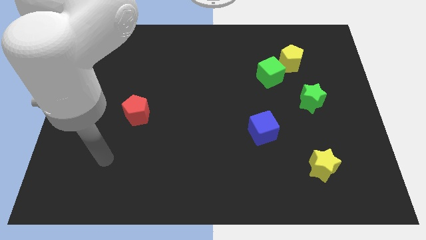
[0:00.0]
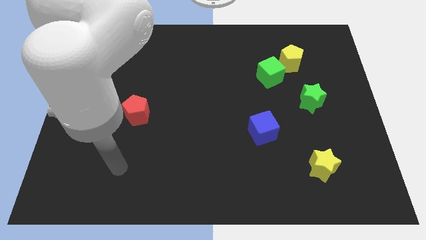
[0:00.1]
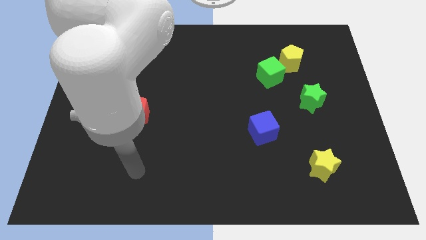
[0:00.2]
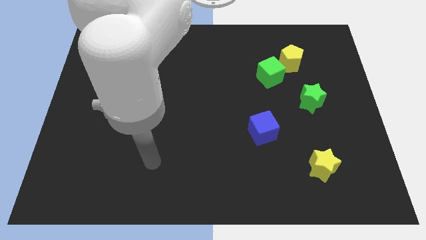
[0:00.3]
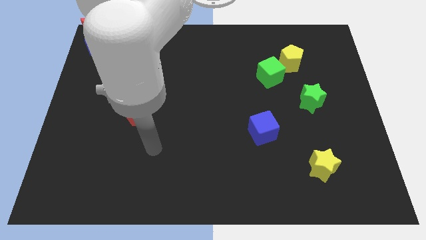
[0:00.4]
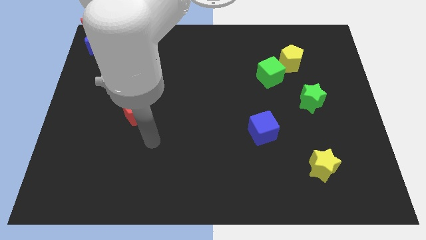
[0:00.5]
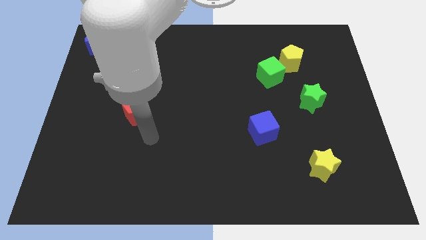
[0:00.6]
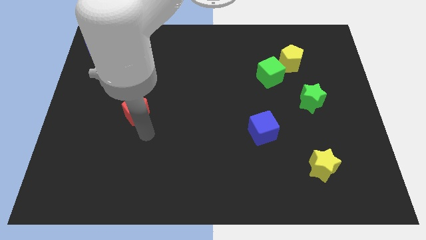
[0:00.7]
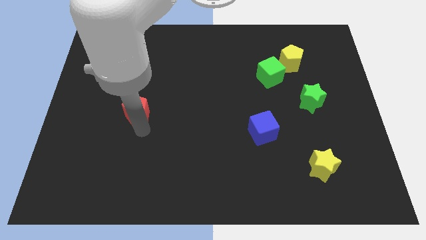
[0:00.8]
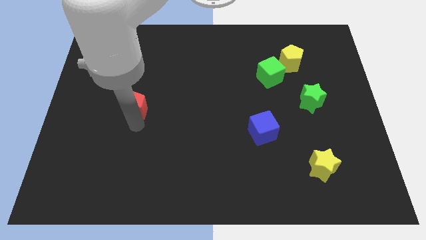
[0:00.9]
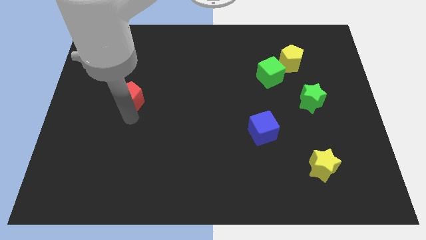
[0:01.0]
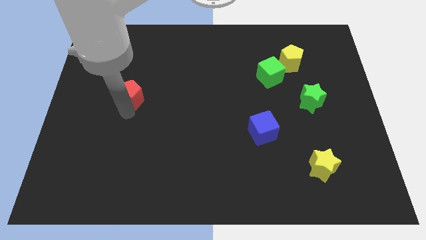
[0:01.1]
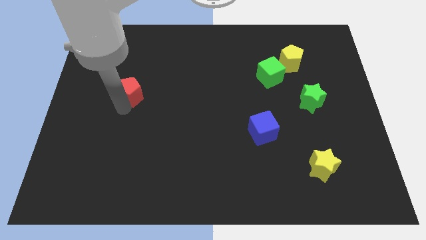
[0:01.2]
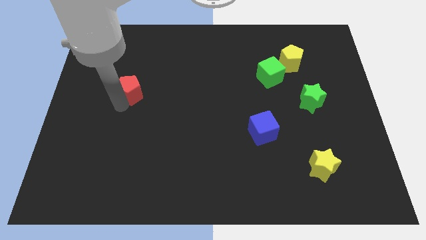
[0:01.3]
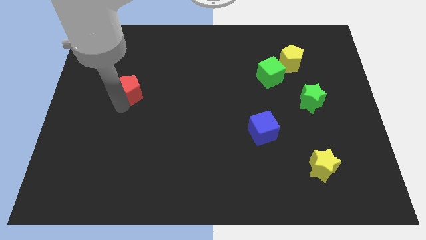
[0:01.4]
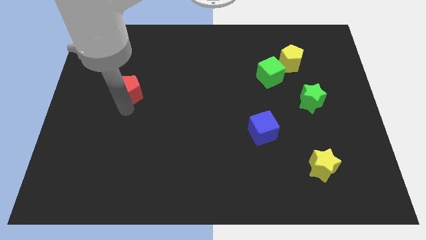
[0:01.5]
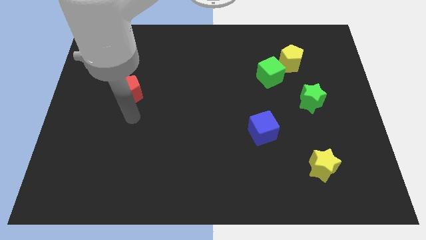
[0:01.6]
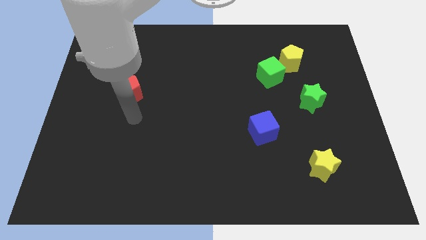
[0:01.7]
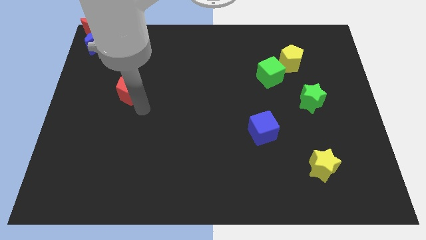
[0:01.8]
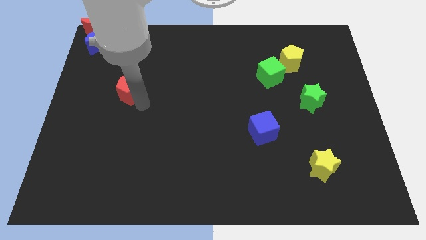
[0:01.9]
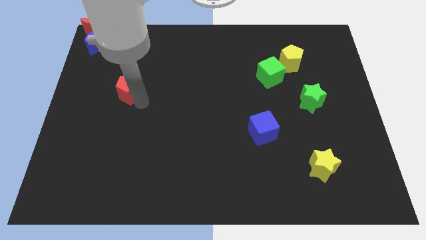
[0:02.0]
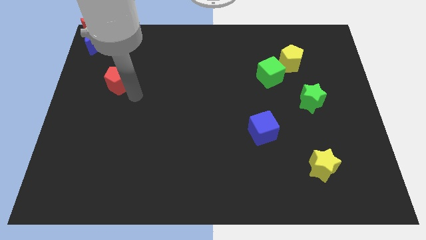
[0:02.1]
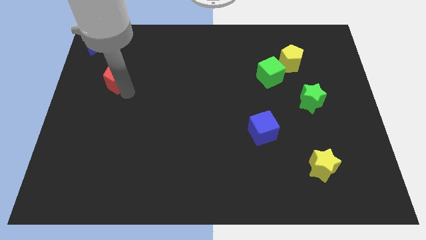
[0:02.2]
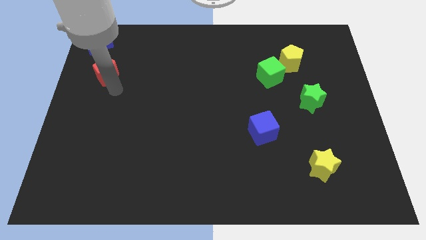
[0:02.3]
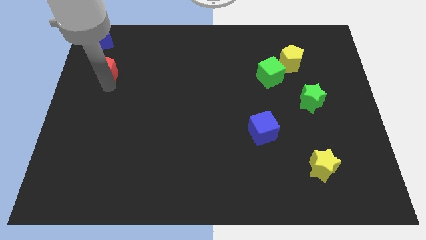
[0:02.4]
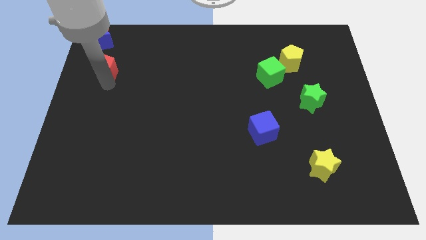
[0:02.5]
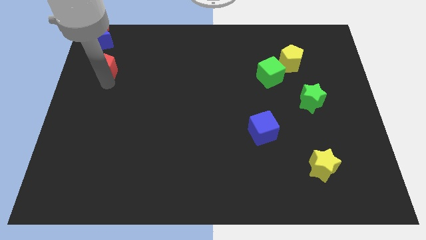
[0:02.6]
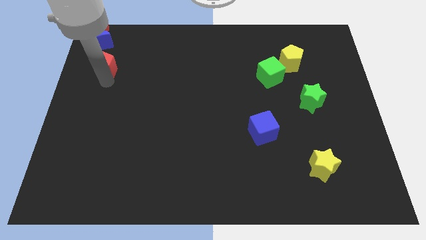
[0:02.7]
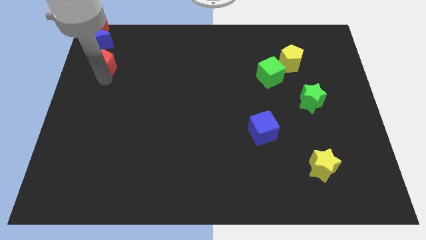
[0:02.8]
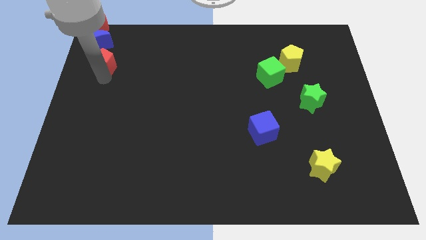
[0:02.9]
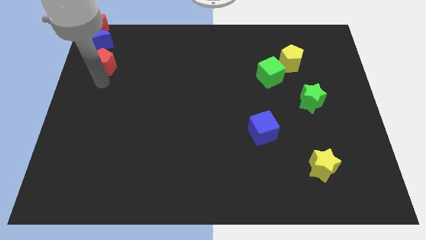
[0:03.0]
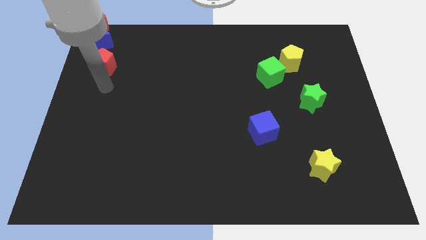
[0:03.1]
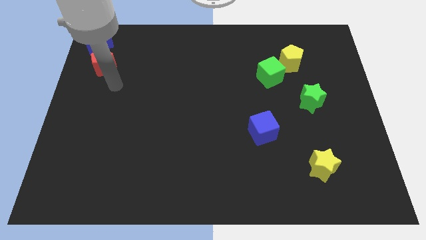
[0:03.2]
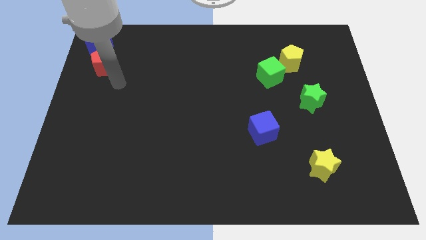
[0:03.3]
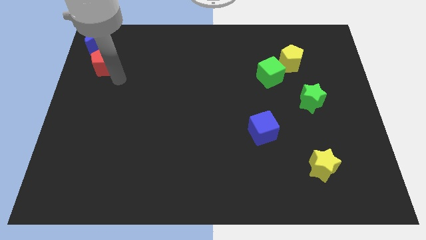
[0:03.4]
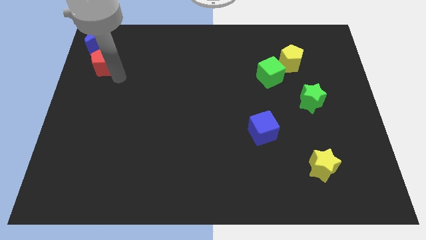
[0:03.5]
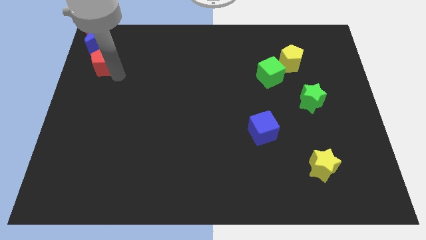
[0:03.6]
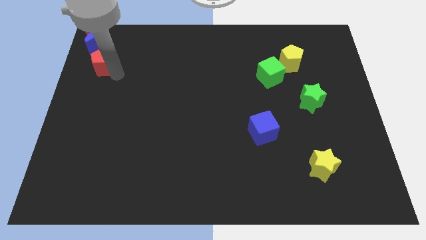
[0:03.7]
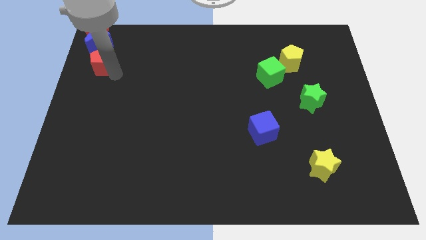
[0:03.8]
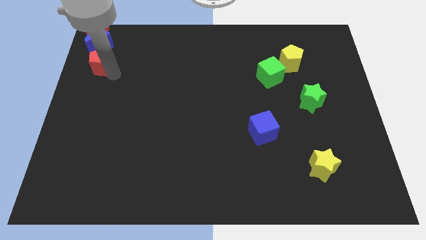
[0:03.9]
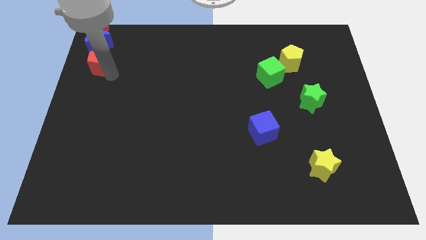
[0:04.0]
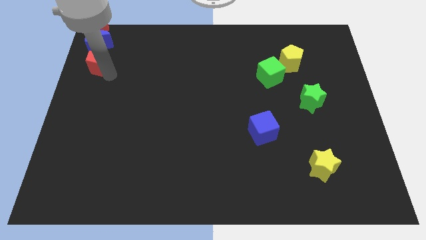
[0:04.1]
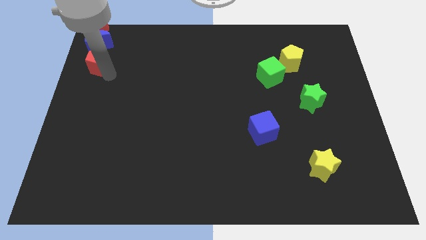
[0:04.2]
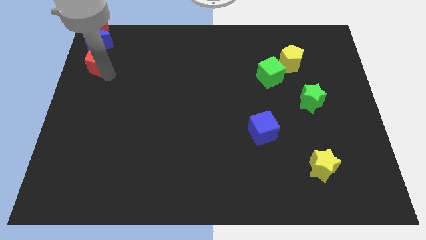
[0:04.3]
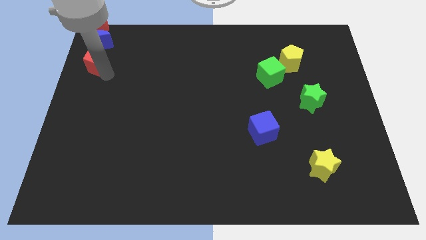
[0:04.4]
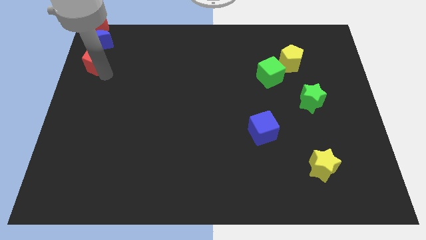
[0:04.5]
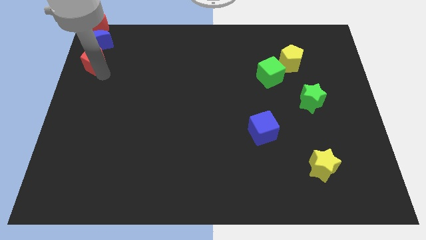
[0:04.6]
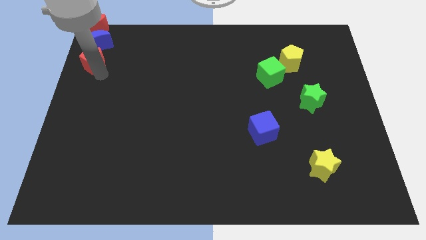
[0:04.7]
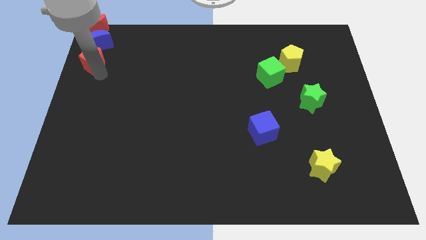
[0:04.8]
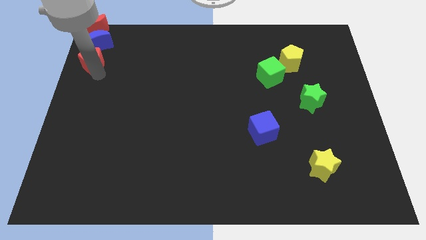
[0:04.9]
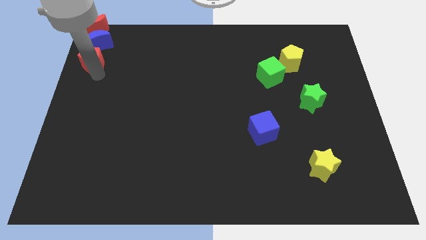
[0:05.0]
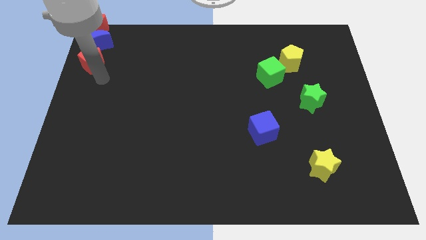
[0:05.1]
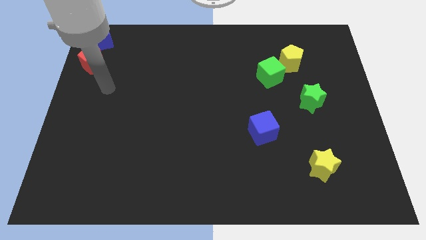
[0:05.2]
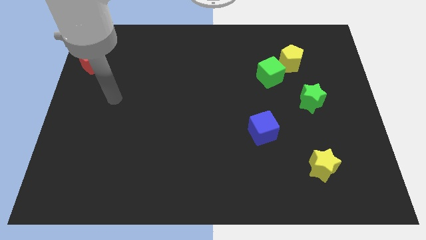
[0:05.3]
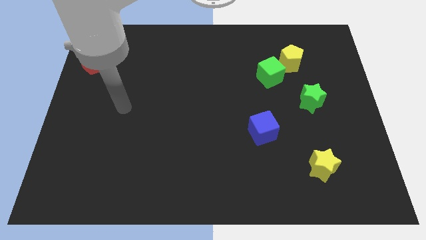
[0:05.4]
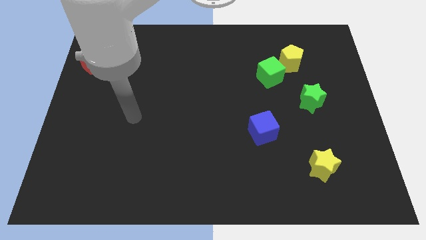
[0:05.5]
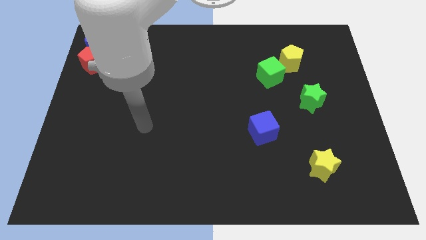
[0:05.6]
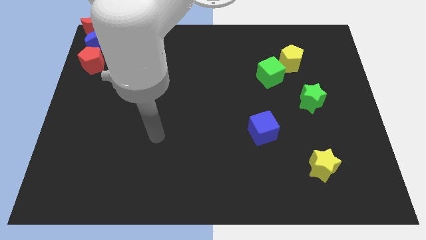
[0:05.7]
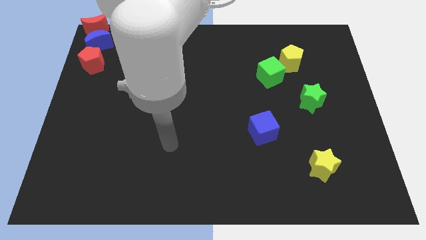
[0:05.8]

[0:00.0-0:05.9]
place red pentagon close to the blue crescent

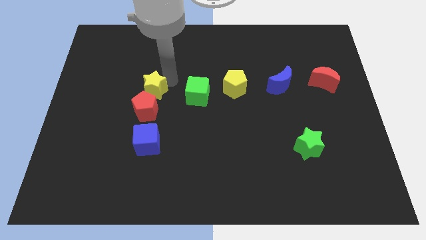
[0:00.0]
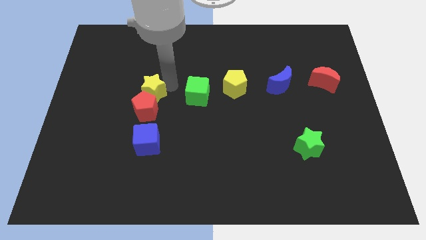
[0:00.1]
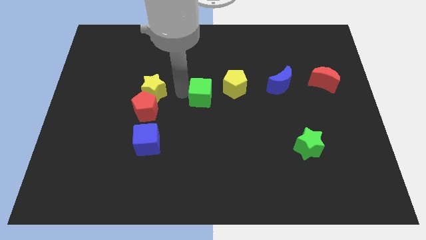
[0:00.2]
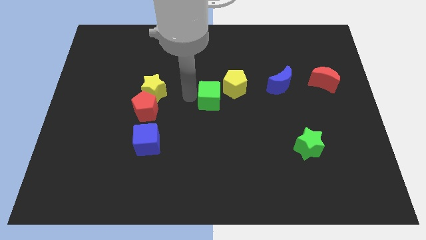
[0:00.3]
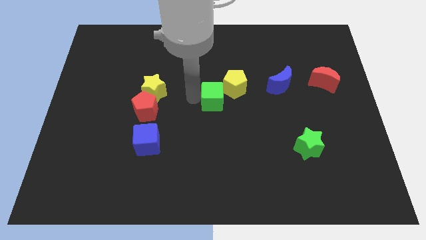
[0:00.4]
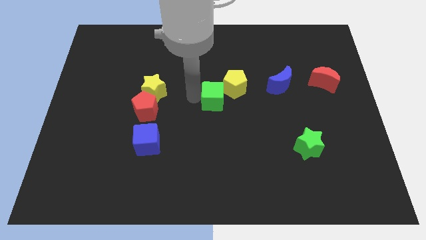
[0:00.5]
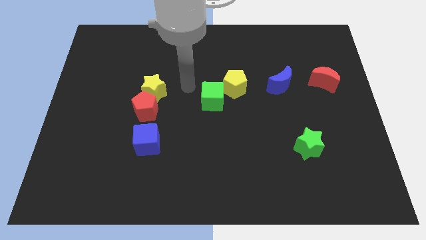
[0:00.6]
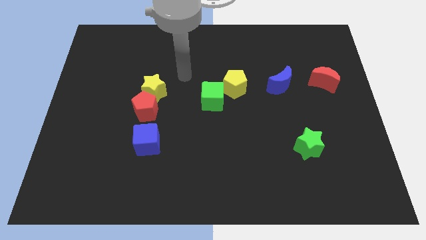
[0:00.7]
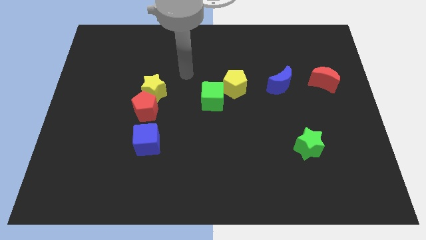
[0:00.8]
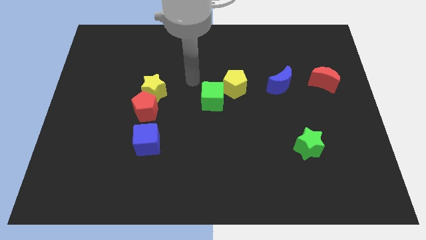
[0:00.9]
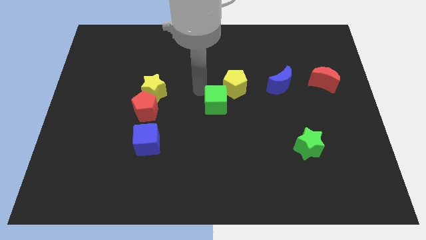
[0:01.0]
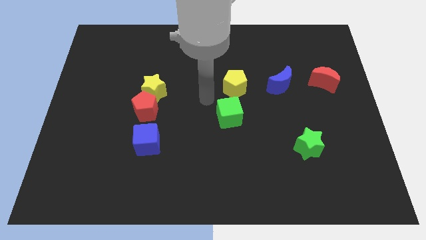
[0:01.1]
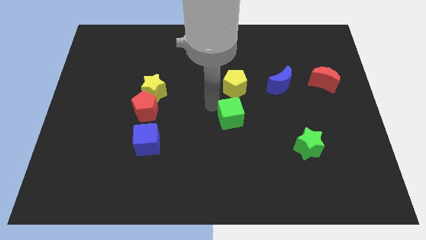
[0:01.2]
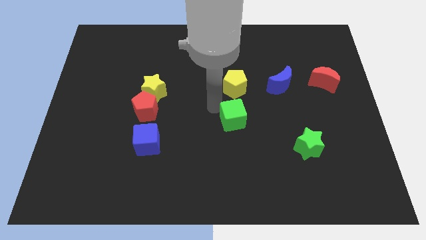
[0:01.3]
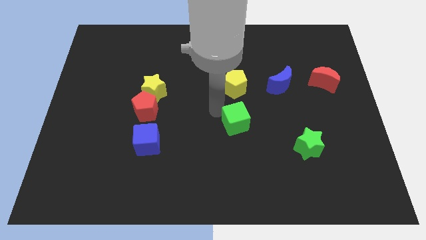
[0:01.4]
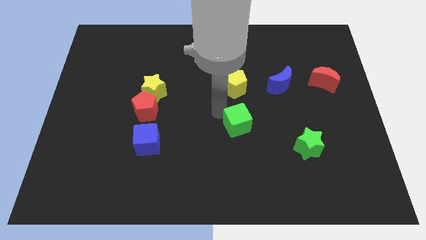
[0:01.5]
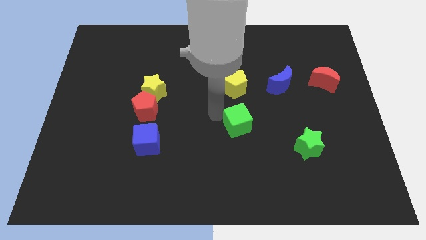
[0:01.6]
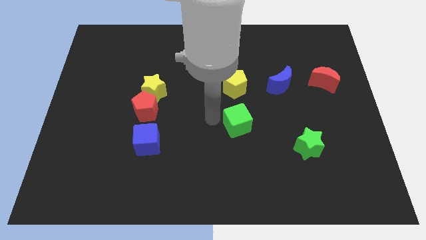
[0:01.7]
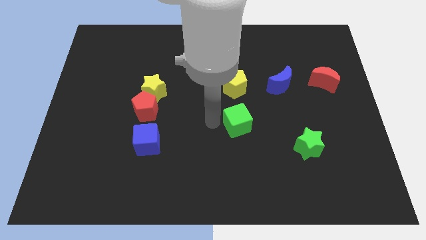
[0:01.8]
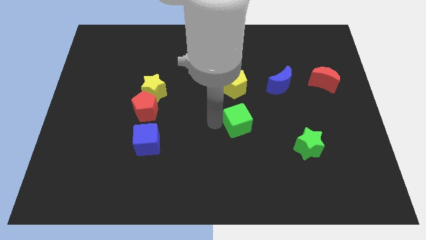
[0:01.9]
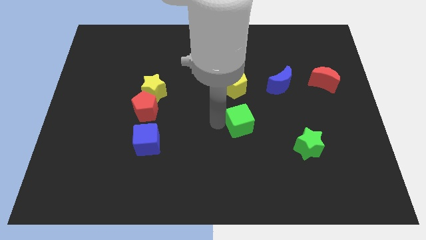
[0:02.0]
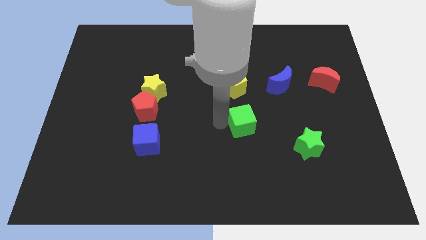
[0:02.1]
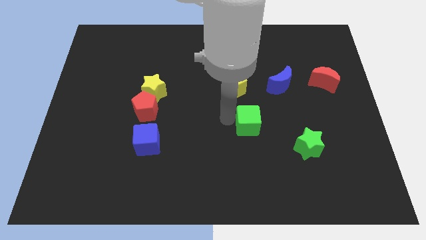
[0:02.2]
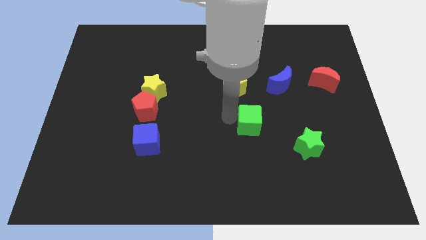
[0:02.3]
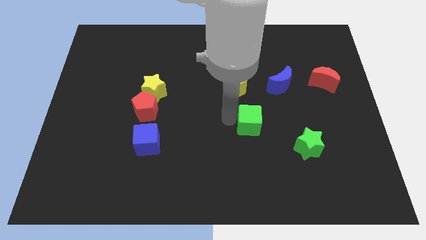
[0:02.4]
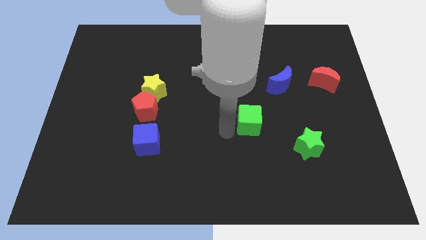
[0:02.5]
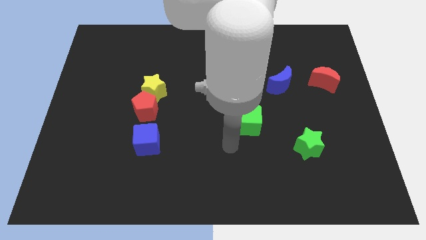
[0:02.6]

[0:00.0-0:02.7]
push the green cube diagonally left of the green star

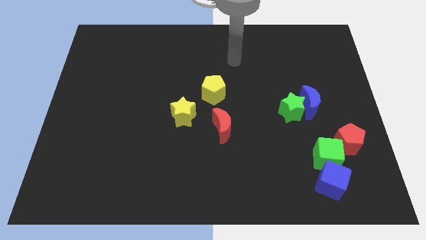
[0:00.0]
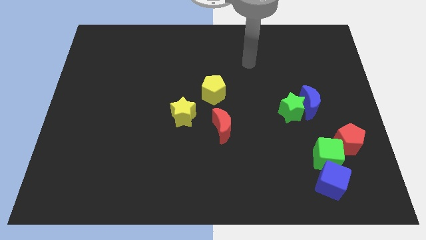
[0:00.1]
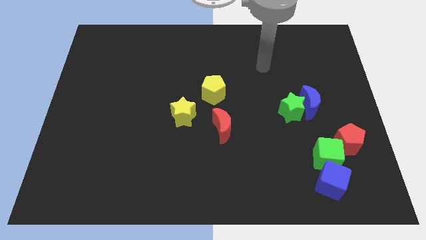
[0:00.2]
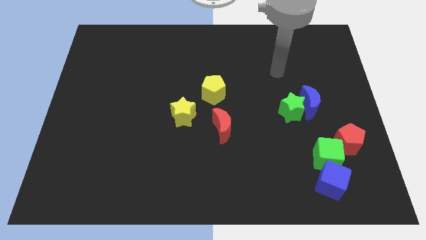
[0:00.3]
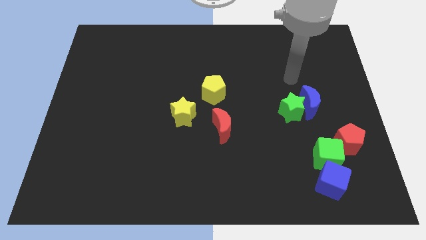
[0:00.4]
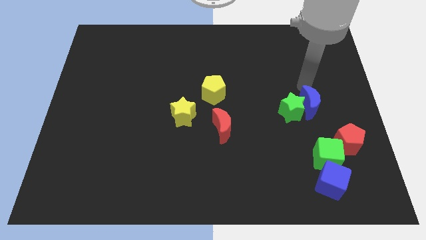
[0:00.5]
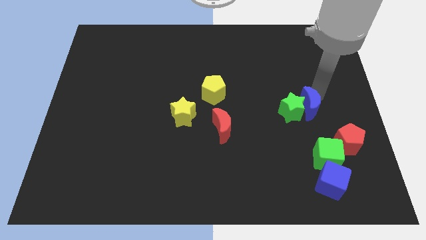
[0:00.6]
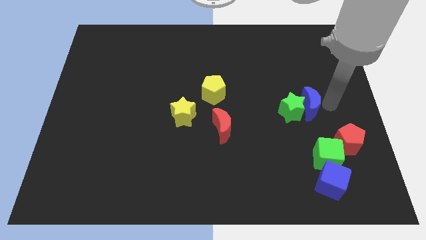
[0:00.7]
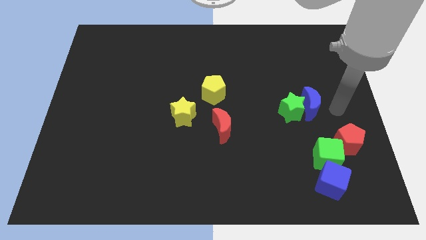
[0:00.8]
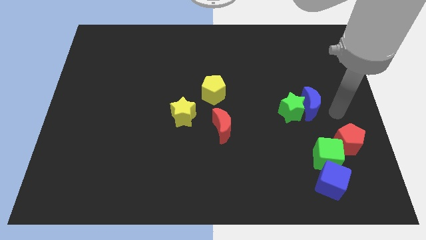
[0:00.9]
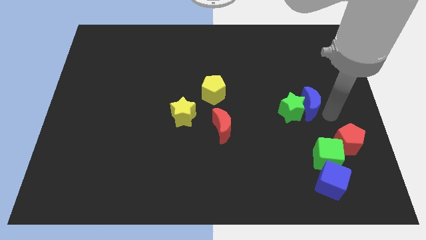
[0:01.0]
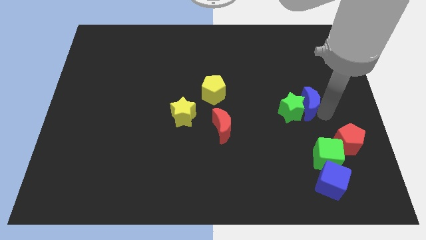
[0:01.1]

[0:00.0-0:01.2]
move the arm right to the blue crescent
